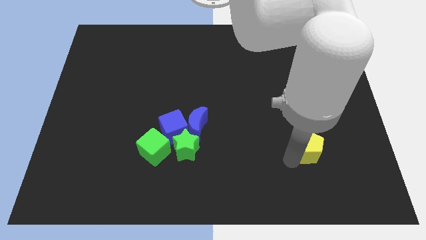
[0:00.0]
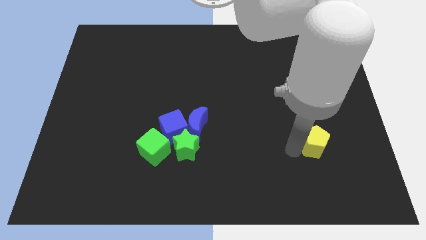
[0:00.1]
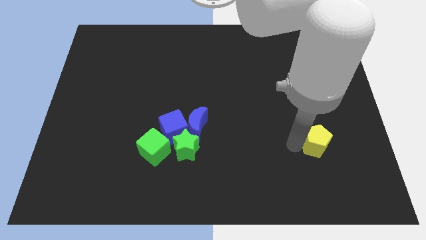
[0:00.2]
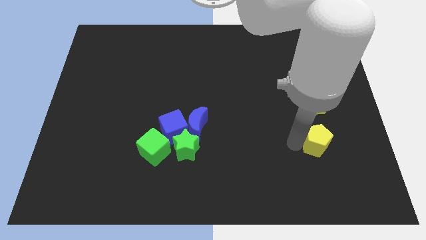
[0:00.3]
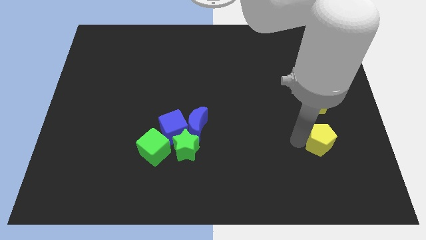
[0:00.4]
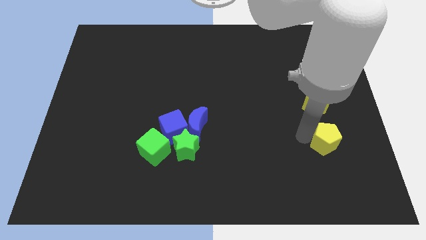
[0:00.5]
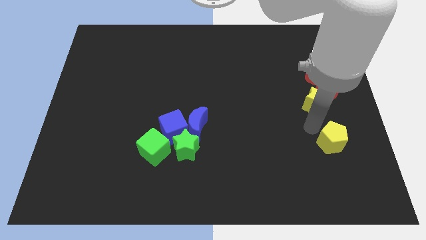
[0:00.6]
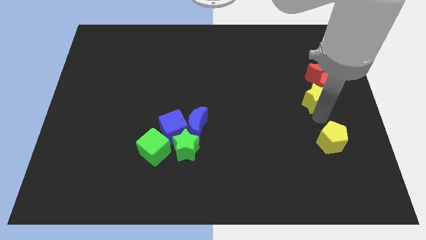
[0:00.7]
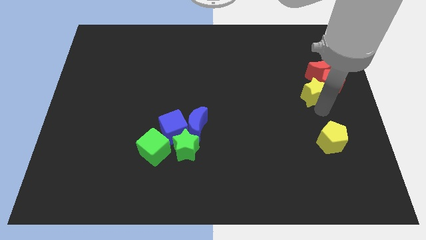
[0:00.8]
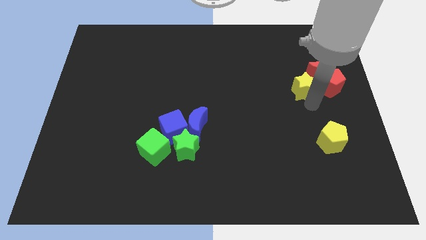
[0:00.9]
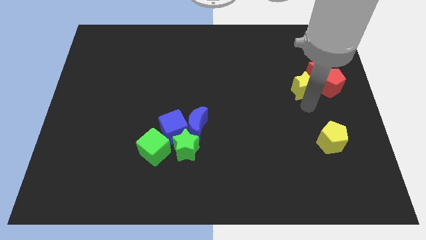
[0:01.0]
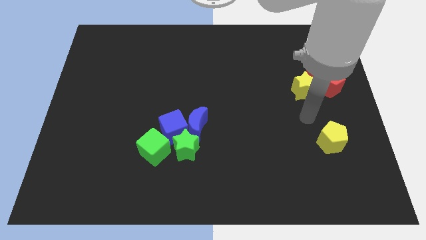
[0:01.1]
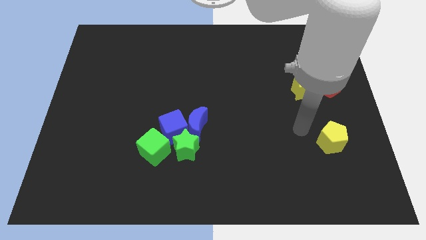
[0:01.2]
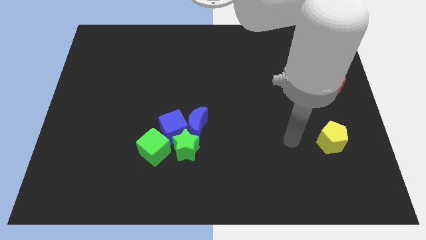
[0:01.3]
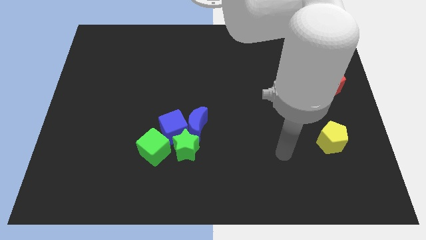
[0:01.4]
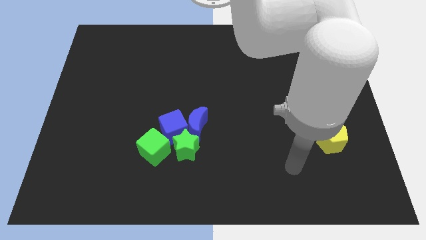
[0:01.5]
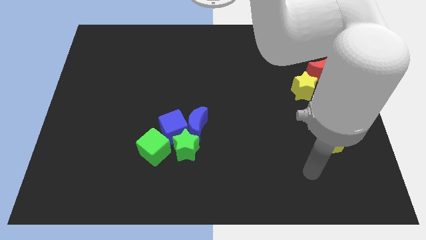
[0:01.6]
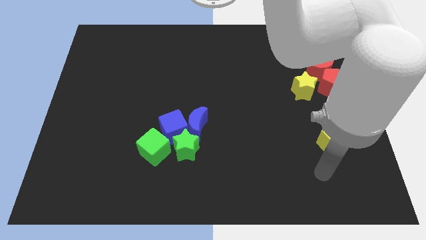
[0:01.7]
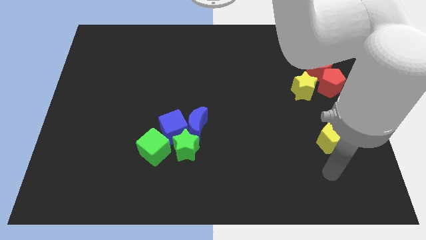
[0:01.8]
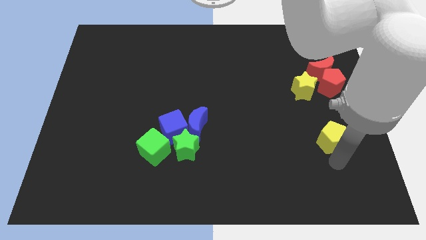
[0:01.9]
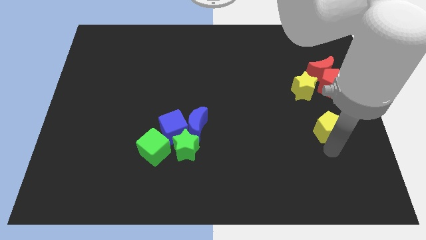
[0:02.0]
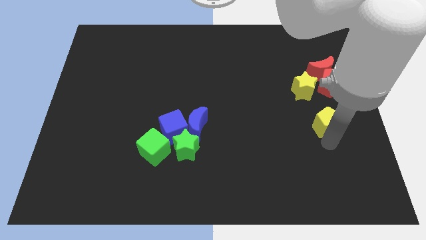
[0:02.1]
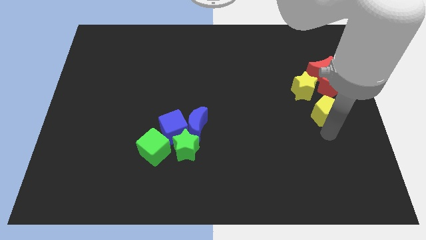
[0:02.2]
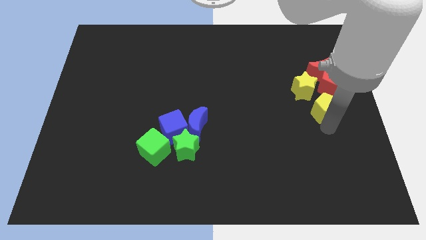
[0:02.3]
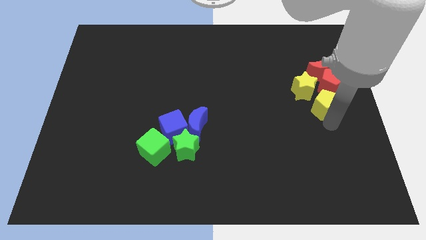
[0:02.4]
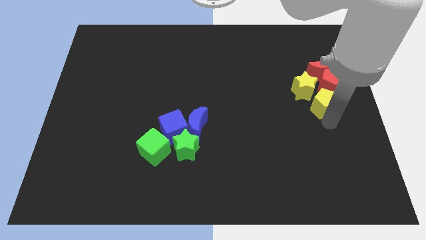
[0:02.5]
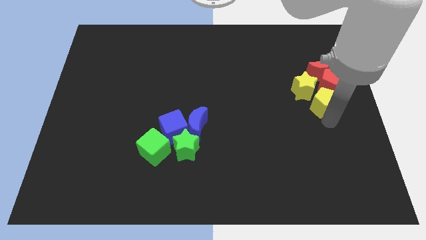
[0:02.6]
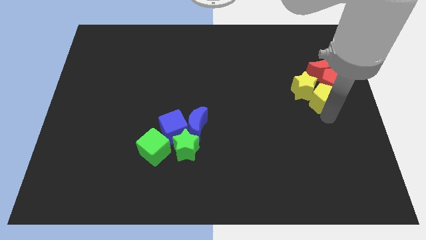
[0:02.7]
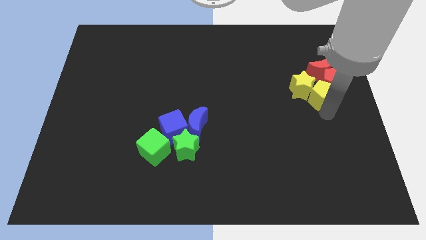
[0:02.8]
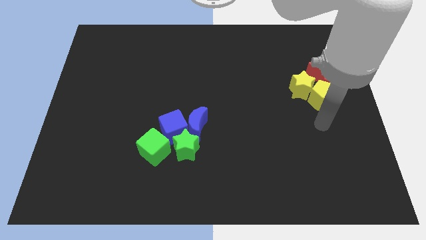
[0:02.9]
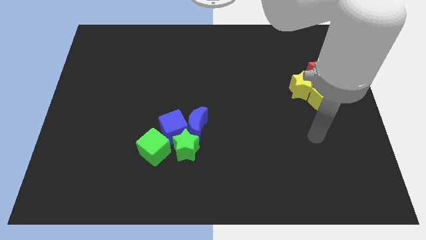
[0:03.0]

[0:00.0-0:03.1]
move yellow pentagon to the yellow star

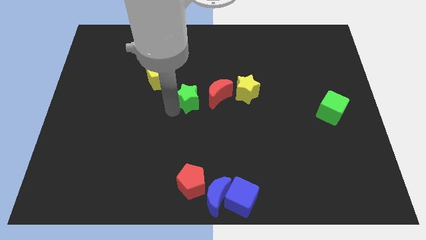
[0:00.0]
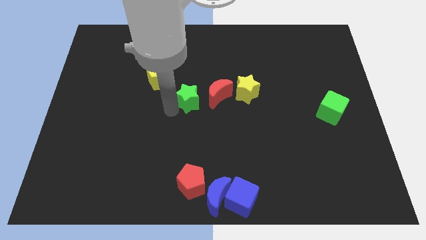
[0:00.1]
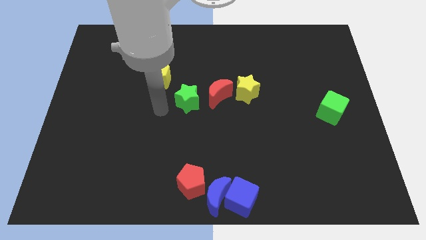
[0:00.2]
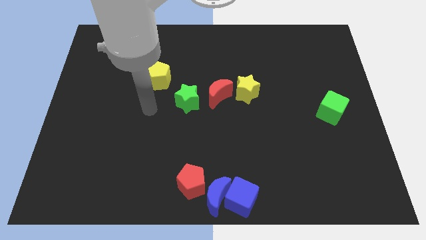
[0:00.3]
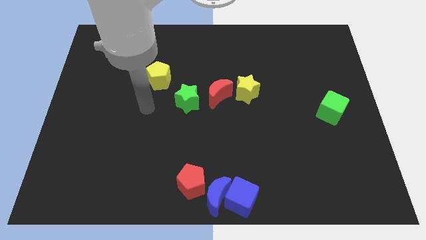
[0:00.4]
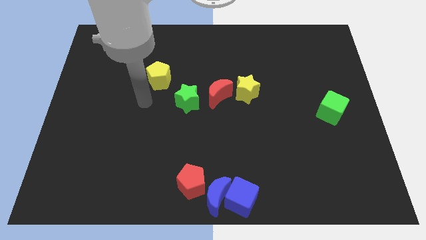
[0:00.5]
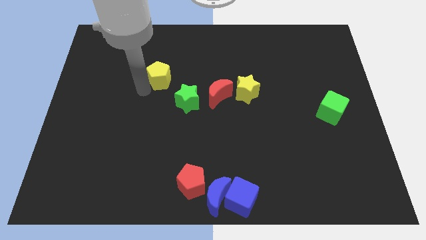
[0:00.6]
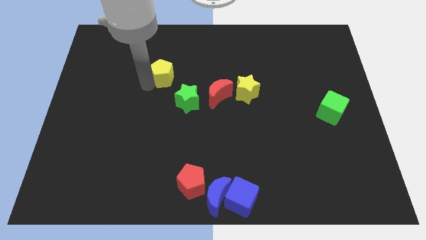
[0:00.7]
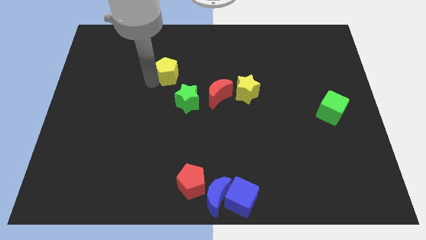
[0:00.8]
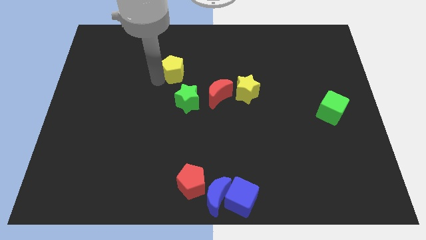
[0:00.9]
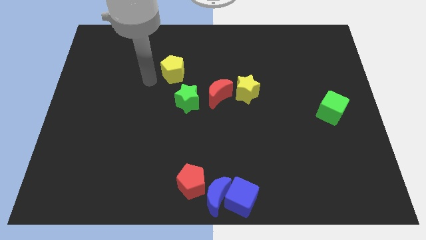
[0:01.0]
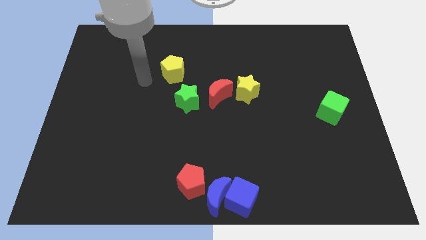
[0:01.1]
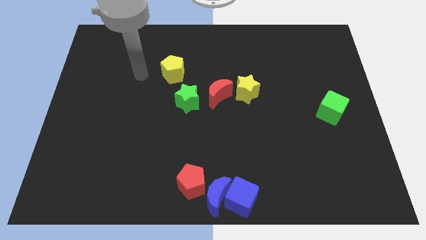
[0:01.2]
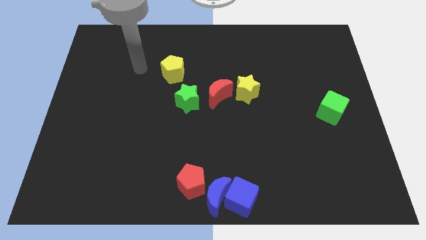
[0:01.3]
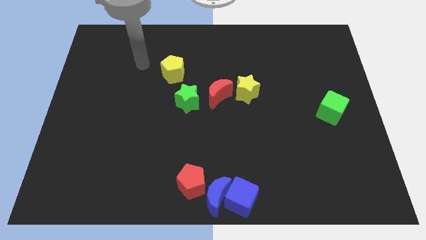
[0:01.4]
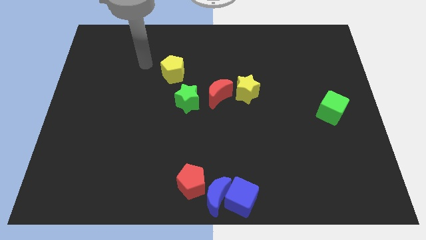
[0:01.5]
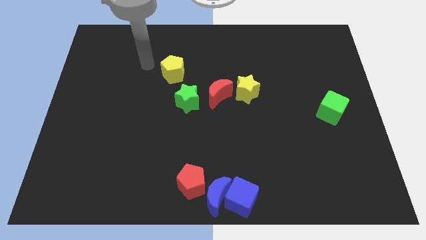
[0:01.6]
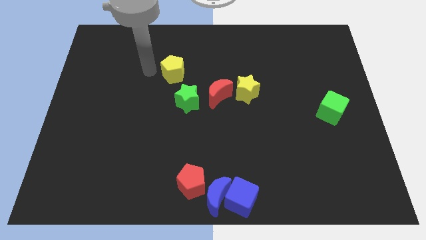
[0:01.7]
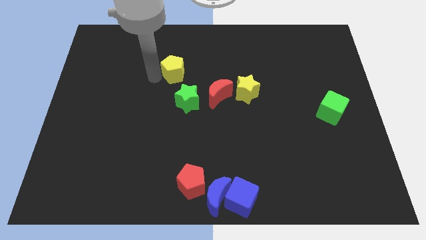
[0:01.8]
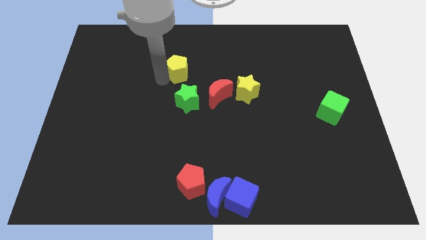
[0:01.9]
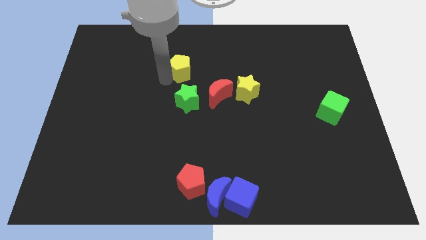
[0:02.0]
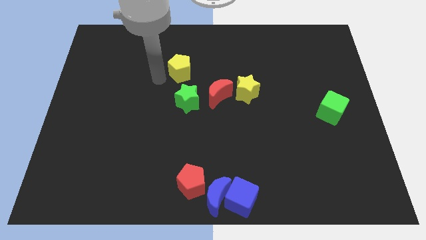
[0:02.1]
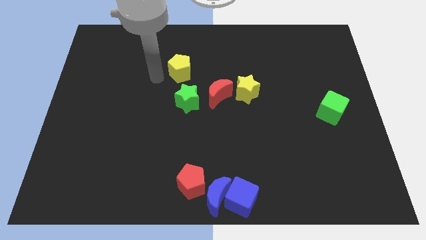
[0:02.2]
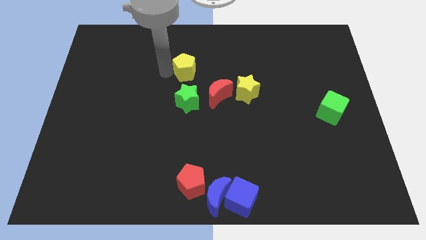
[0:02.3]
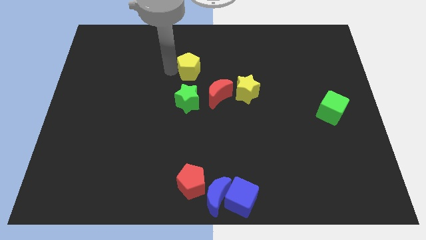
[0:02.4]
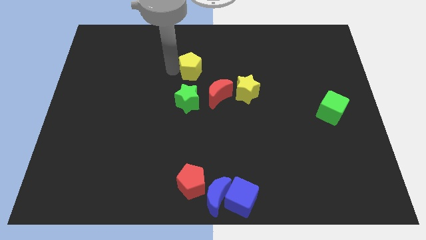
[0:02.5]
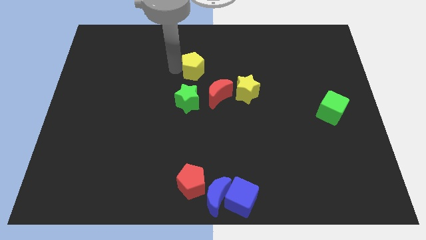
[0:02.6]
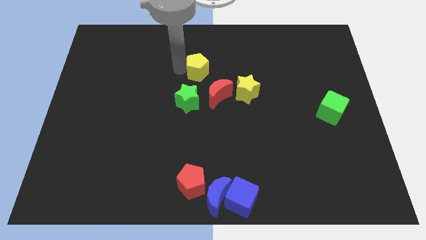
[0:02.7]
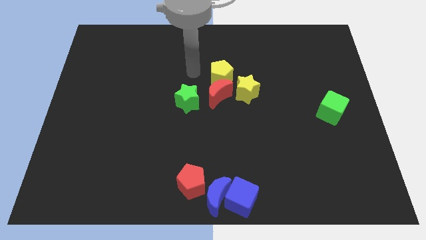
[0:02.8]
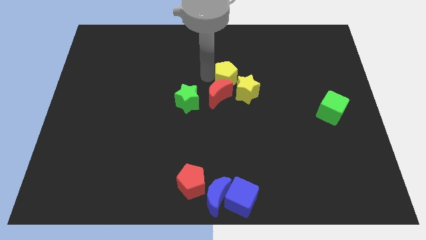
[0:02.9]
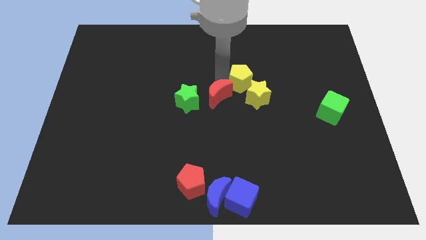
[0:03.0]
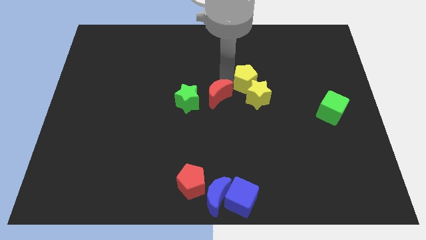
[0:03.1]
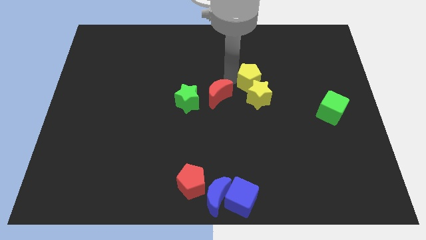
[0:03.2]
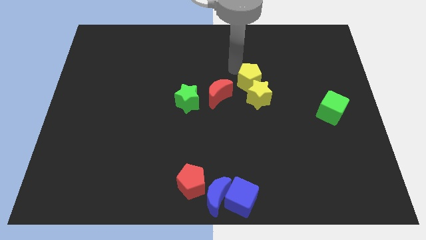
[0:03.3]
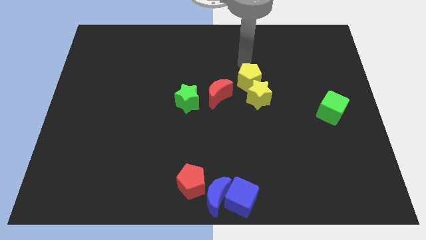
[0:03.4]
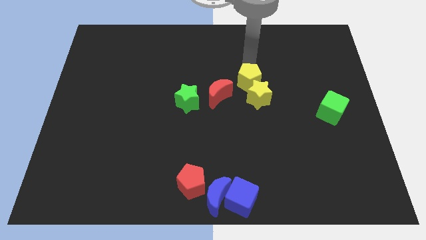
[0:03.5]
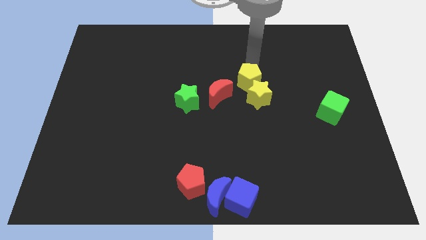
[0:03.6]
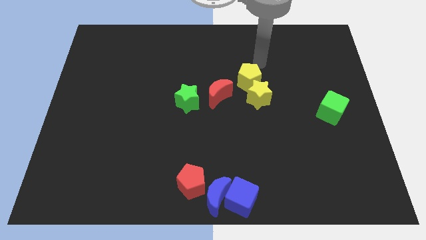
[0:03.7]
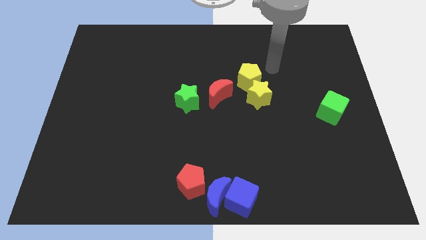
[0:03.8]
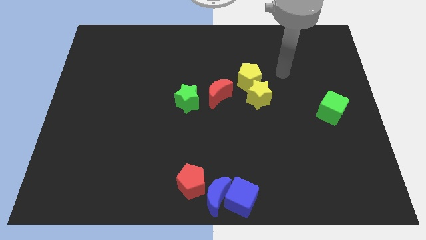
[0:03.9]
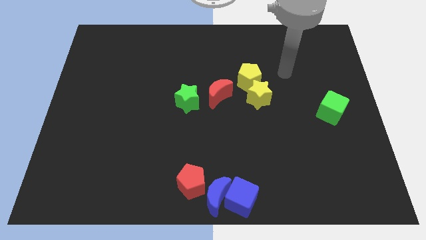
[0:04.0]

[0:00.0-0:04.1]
push yellow pentagon diagonal to red moon

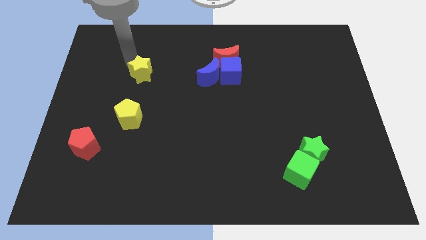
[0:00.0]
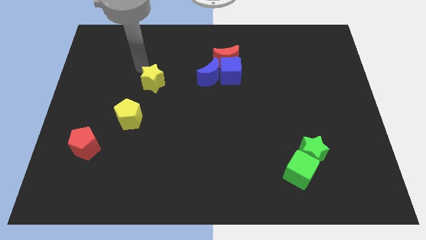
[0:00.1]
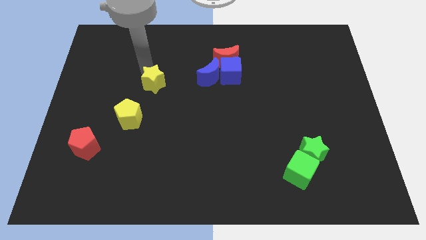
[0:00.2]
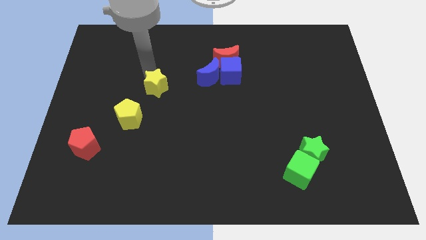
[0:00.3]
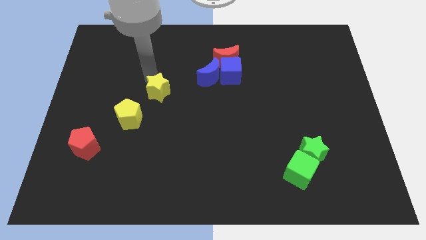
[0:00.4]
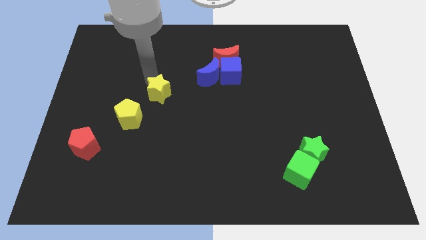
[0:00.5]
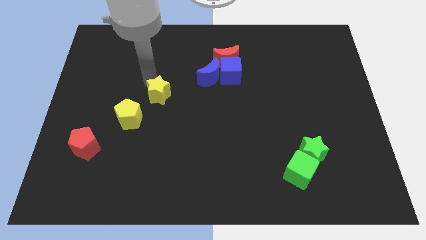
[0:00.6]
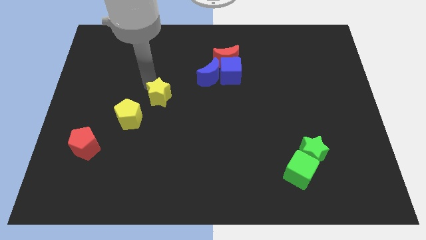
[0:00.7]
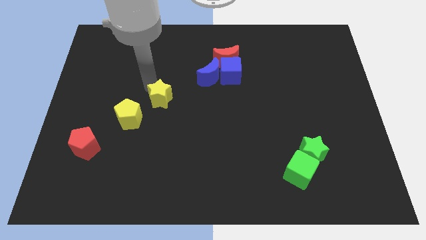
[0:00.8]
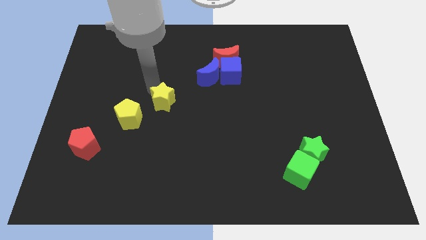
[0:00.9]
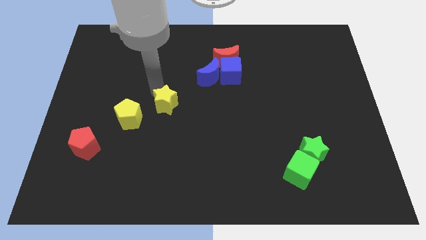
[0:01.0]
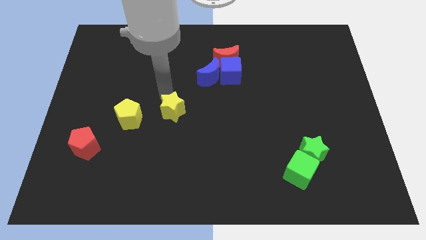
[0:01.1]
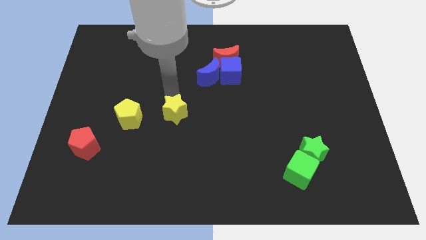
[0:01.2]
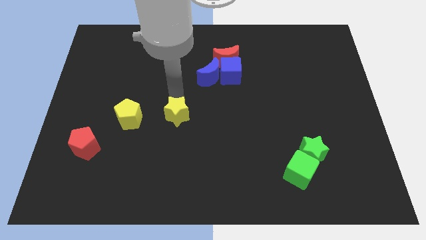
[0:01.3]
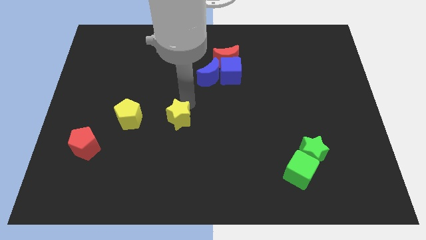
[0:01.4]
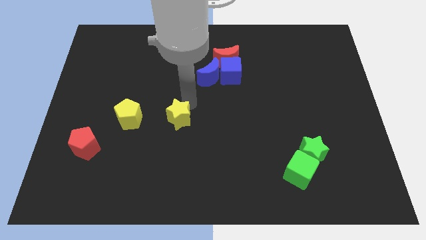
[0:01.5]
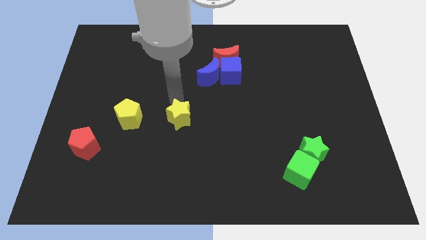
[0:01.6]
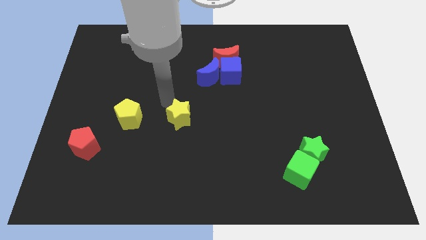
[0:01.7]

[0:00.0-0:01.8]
move the yellow star to the right of the yellow pentagon
